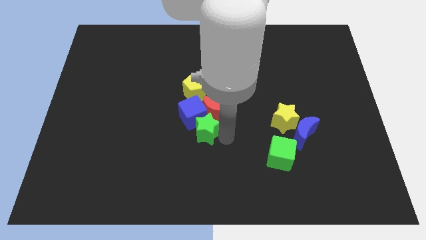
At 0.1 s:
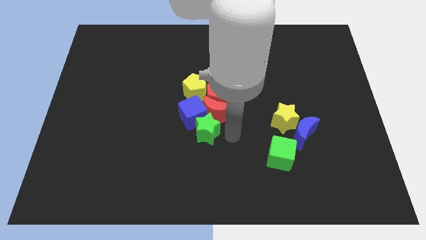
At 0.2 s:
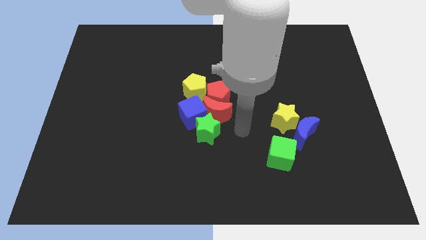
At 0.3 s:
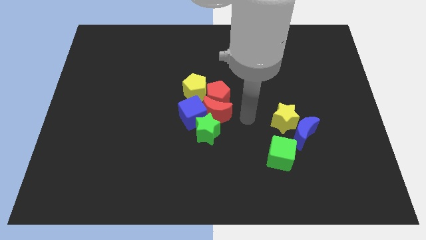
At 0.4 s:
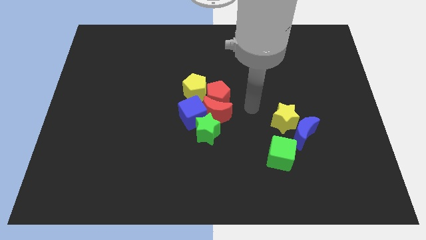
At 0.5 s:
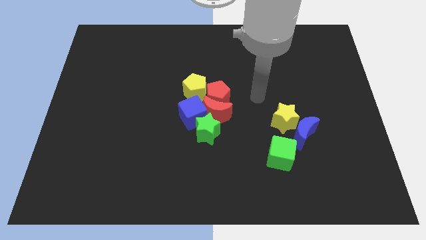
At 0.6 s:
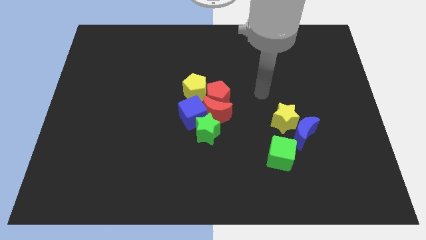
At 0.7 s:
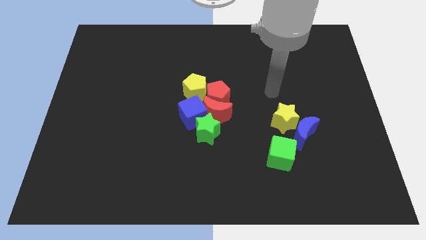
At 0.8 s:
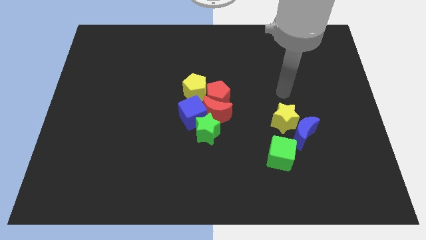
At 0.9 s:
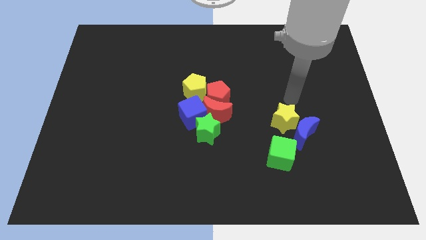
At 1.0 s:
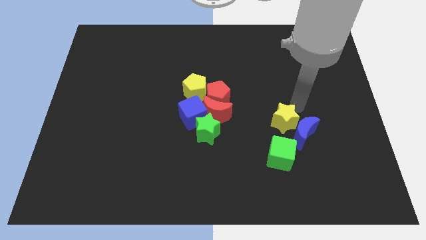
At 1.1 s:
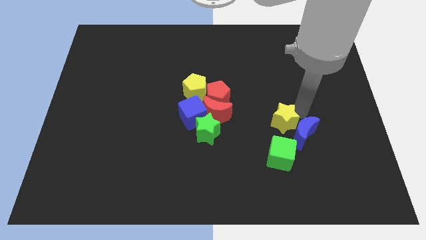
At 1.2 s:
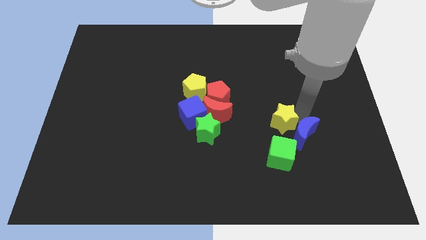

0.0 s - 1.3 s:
point your arm on the top of yellow pentagon

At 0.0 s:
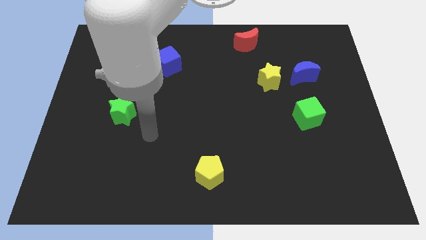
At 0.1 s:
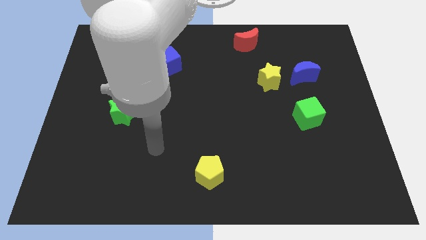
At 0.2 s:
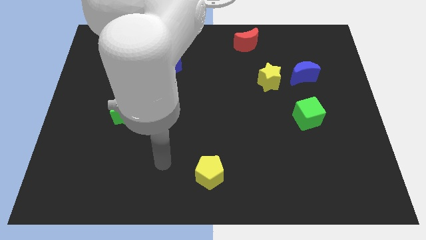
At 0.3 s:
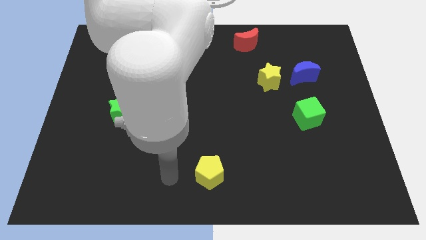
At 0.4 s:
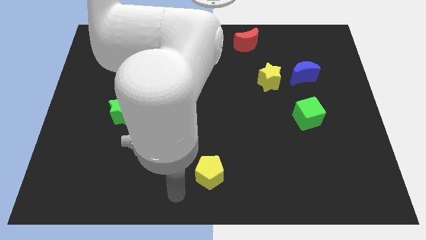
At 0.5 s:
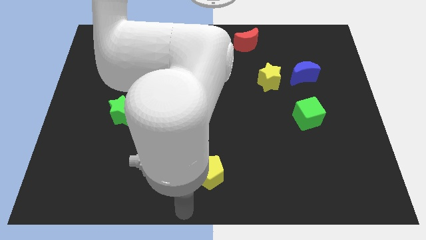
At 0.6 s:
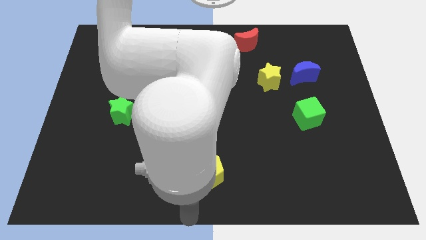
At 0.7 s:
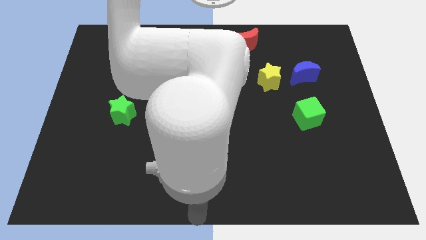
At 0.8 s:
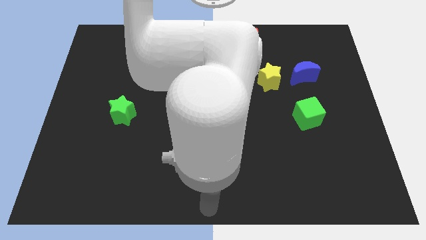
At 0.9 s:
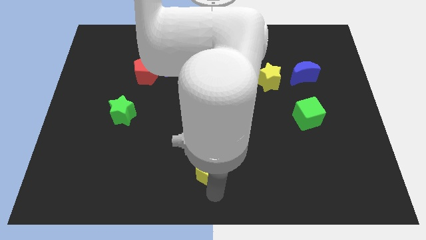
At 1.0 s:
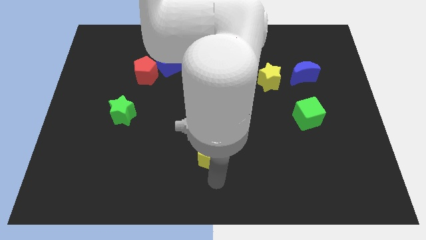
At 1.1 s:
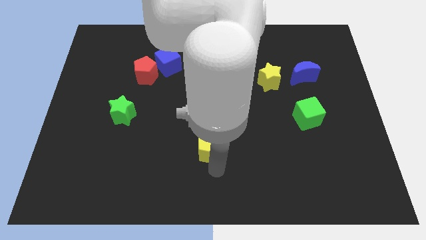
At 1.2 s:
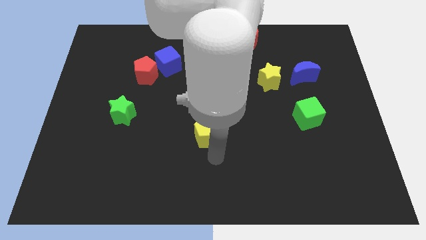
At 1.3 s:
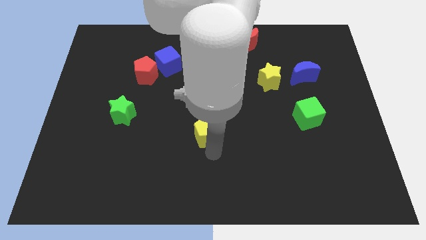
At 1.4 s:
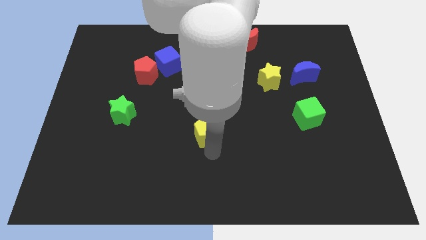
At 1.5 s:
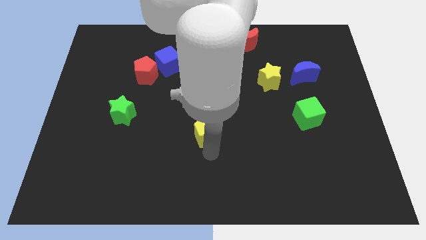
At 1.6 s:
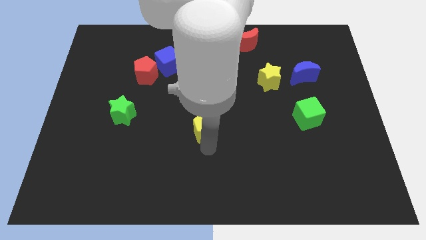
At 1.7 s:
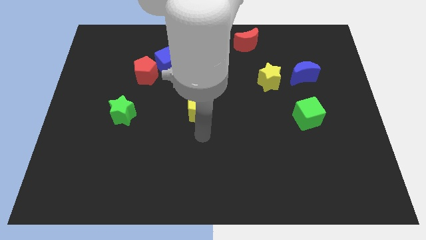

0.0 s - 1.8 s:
push the yellow pentagon towards the center

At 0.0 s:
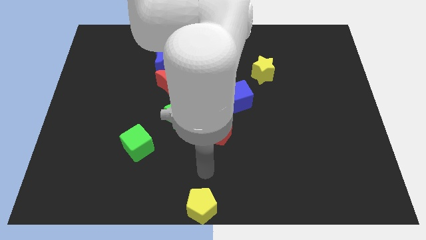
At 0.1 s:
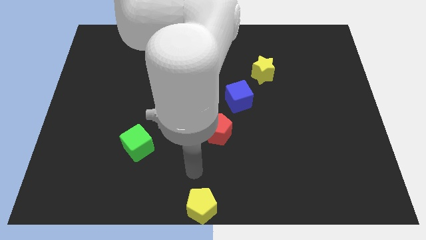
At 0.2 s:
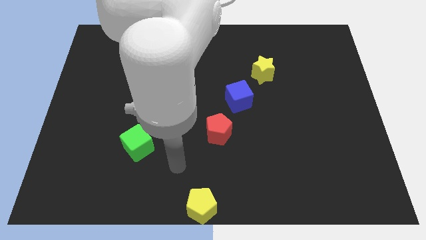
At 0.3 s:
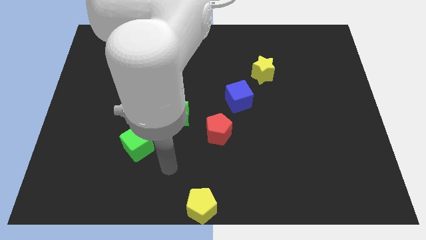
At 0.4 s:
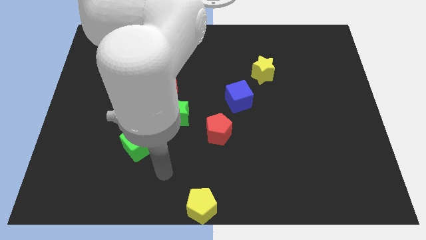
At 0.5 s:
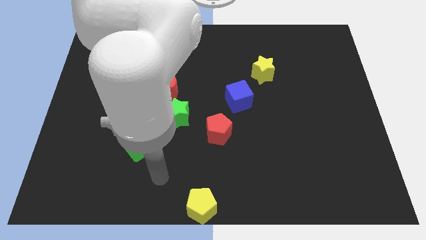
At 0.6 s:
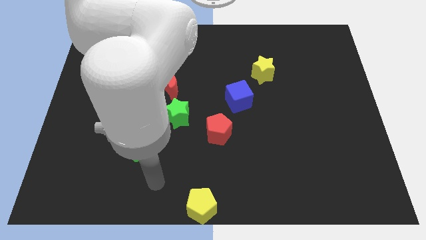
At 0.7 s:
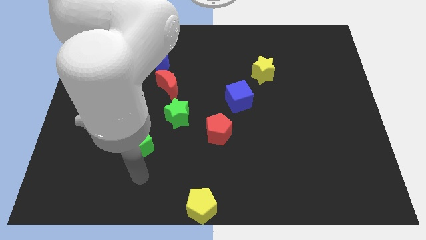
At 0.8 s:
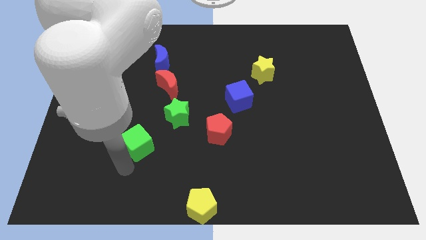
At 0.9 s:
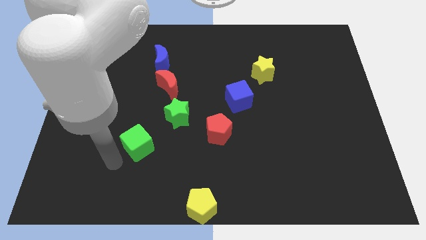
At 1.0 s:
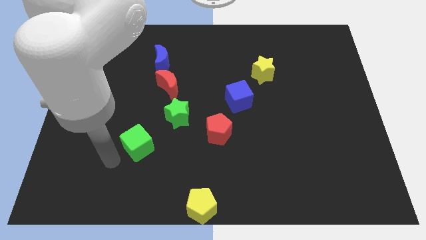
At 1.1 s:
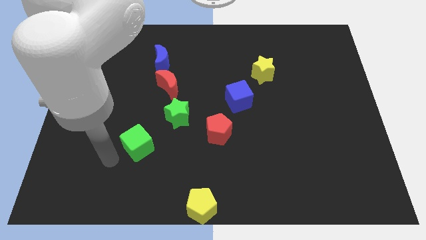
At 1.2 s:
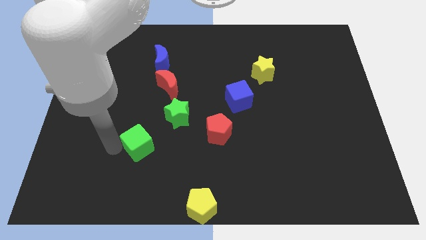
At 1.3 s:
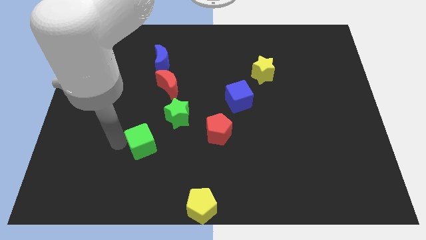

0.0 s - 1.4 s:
move your arm left to the green cube

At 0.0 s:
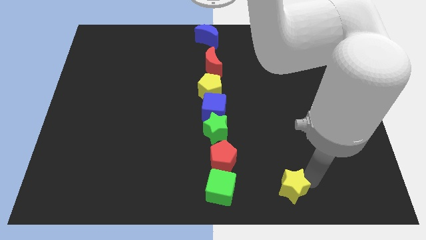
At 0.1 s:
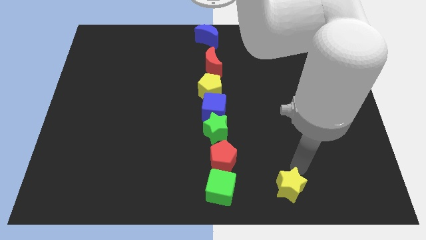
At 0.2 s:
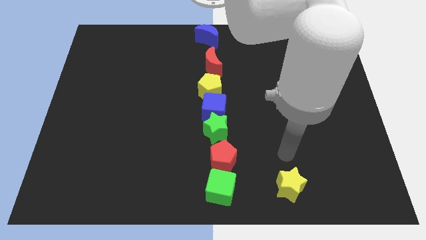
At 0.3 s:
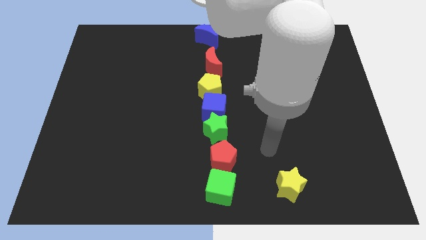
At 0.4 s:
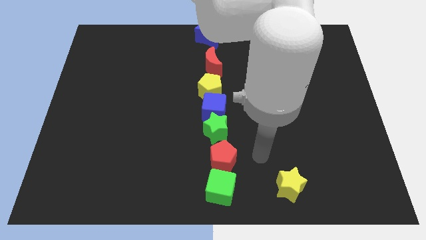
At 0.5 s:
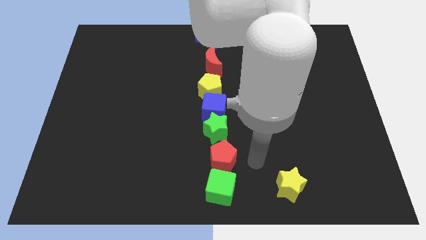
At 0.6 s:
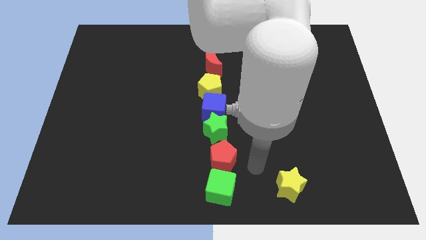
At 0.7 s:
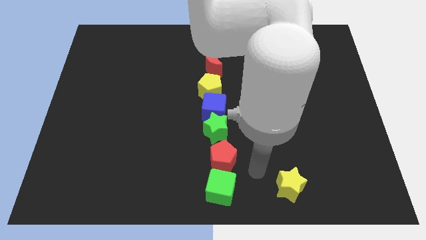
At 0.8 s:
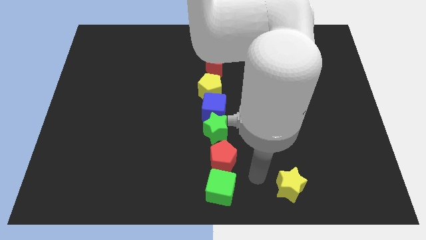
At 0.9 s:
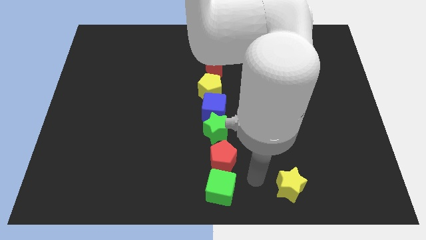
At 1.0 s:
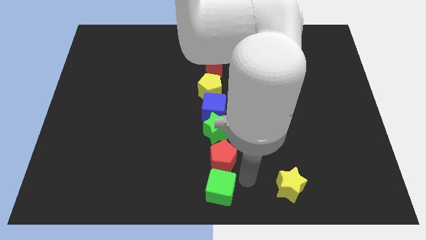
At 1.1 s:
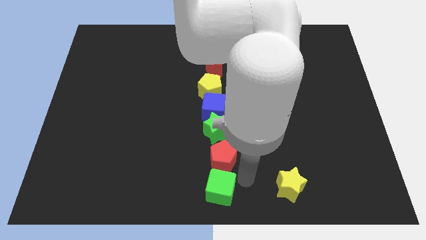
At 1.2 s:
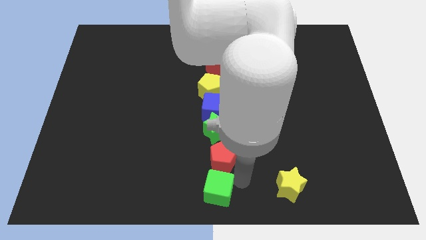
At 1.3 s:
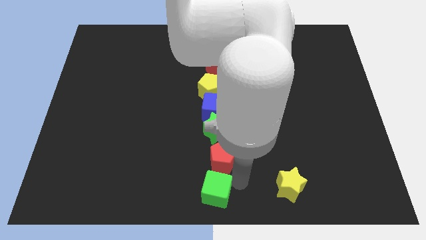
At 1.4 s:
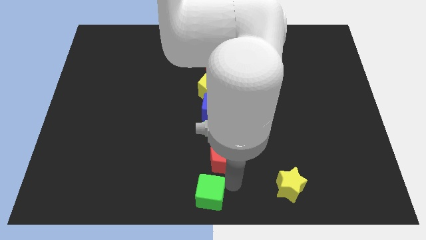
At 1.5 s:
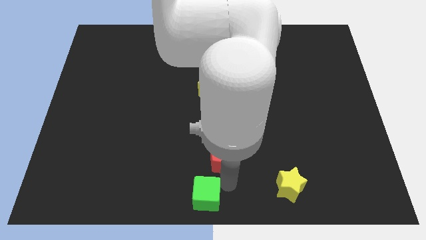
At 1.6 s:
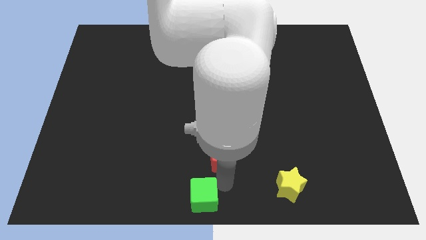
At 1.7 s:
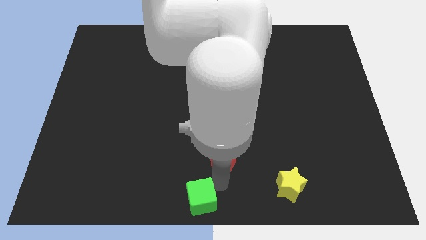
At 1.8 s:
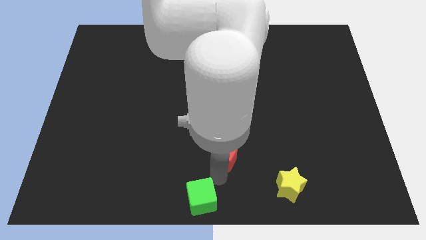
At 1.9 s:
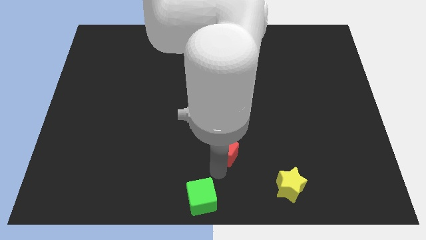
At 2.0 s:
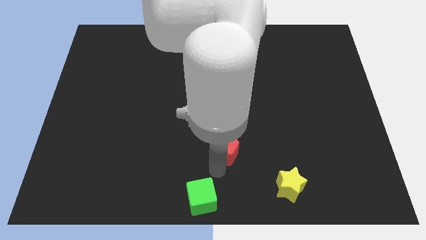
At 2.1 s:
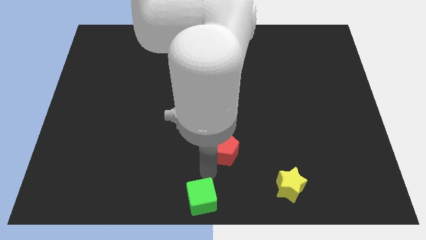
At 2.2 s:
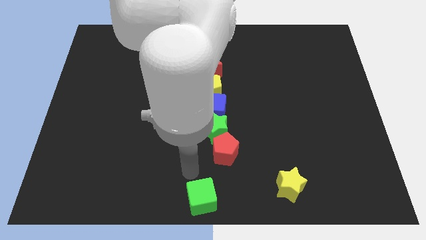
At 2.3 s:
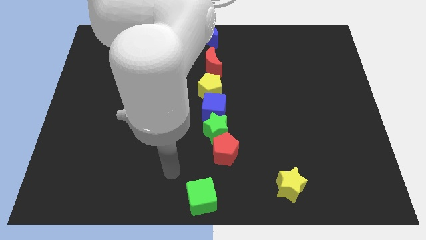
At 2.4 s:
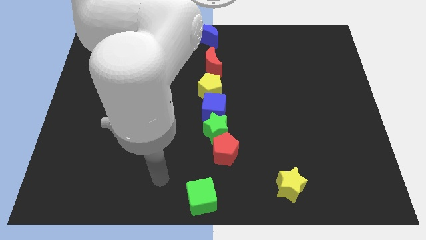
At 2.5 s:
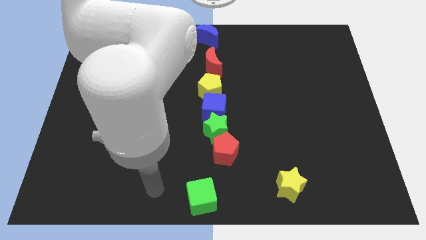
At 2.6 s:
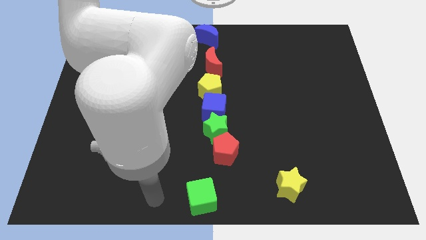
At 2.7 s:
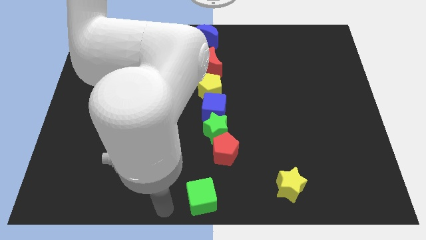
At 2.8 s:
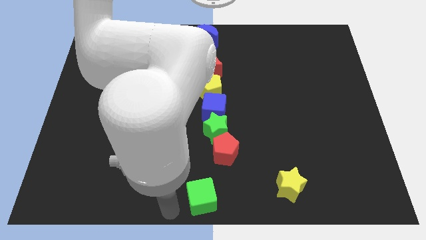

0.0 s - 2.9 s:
separate green cube from red pentagon

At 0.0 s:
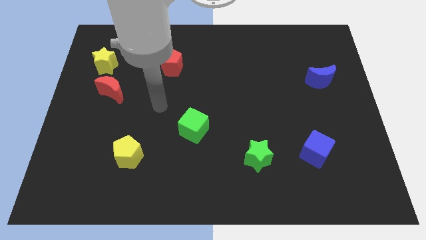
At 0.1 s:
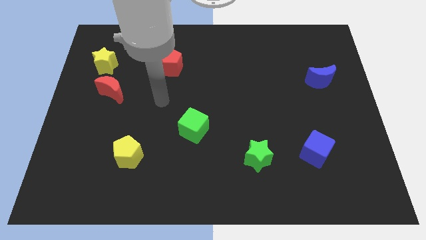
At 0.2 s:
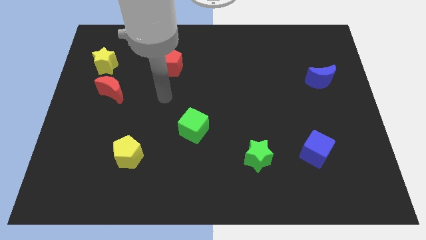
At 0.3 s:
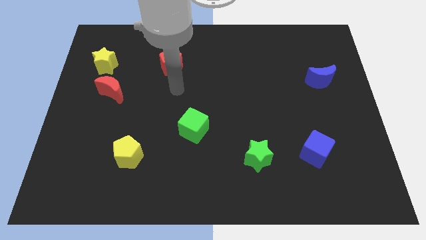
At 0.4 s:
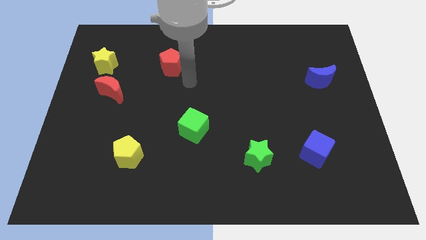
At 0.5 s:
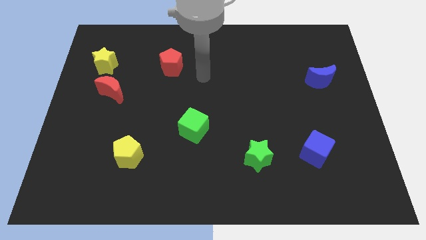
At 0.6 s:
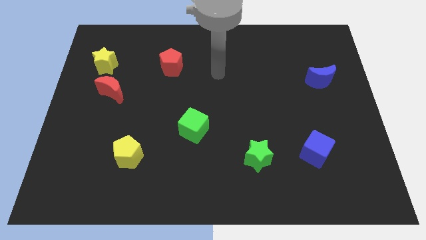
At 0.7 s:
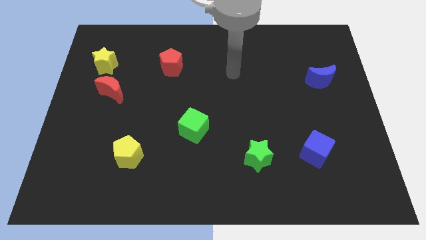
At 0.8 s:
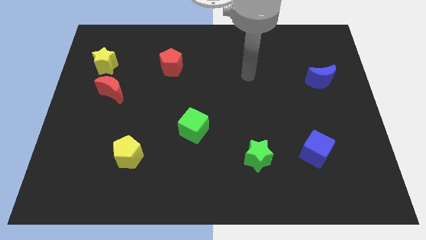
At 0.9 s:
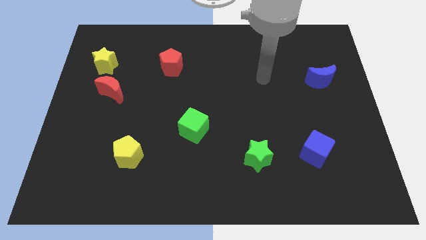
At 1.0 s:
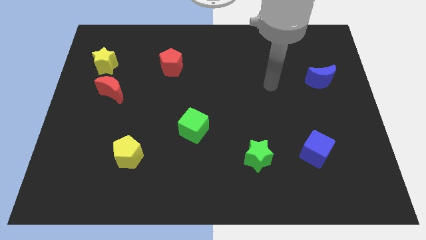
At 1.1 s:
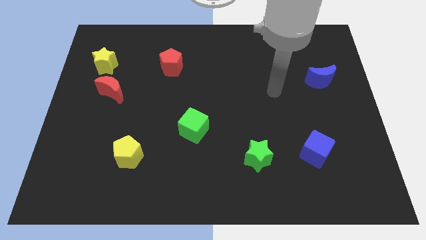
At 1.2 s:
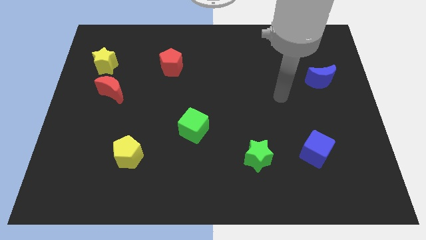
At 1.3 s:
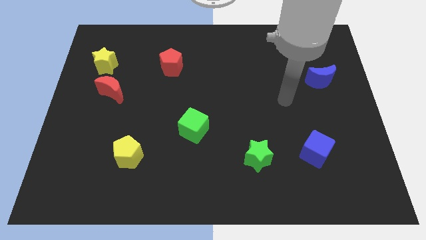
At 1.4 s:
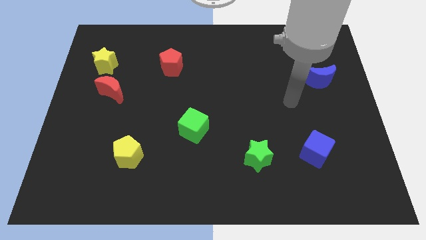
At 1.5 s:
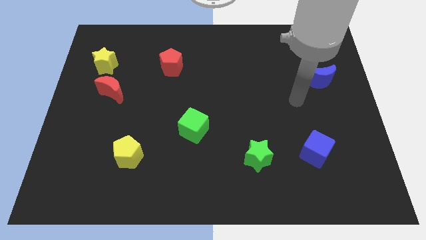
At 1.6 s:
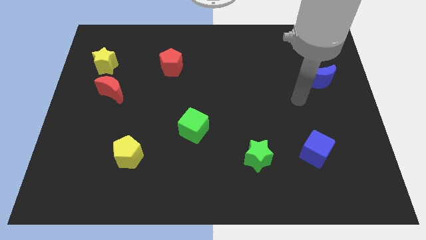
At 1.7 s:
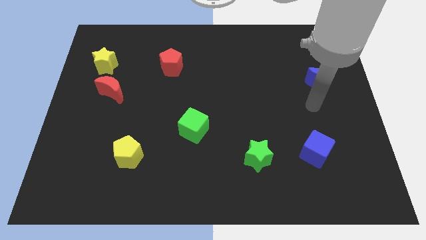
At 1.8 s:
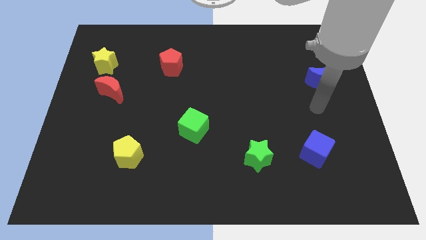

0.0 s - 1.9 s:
move your arm in between the blue blocks
